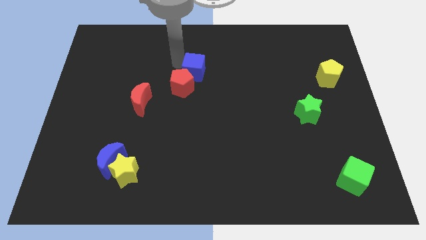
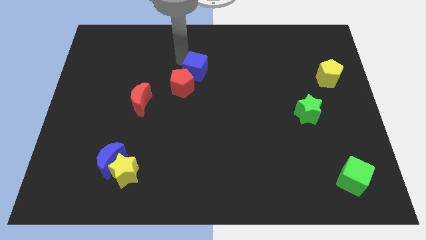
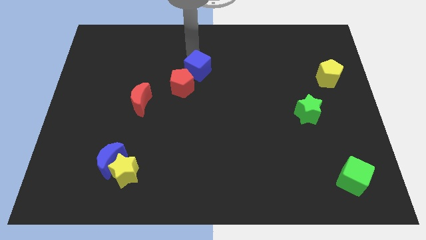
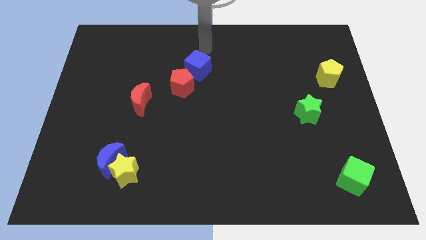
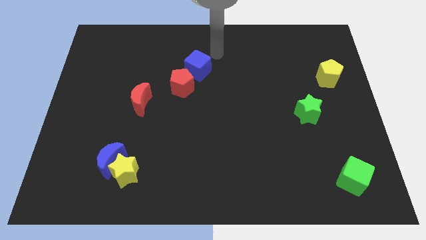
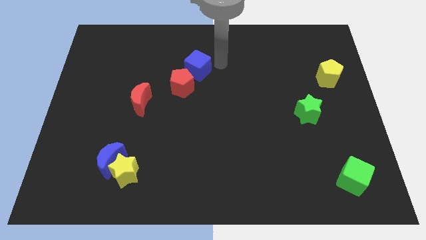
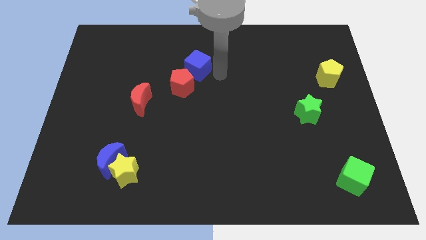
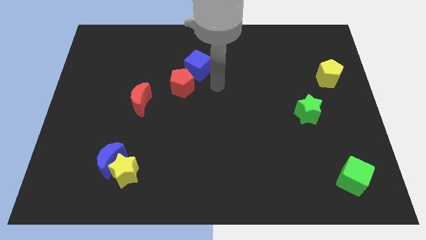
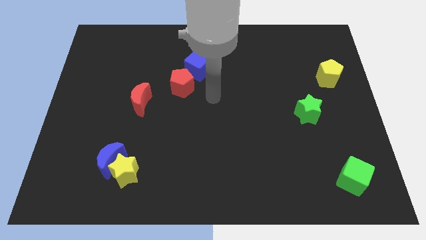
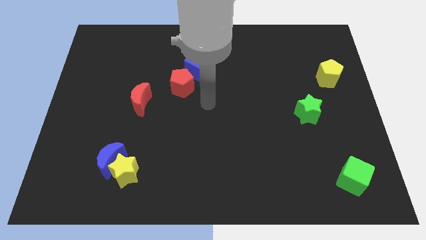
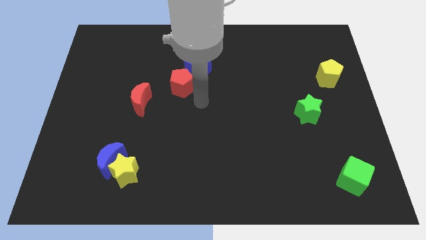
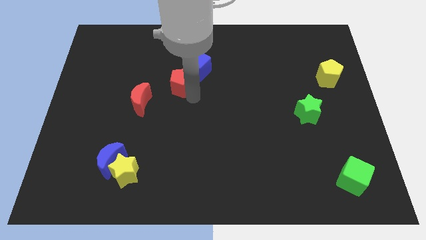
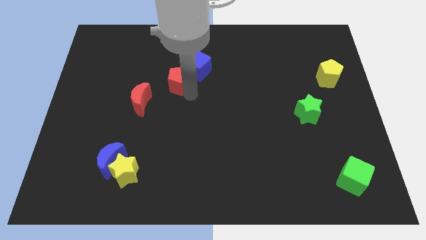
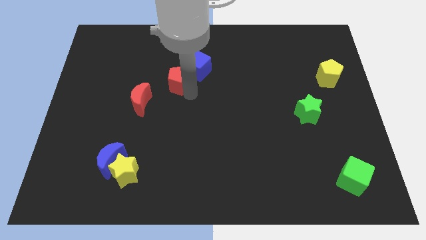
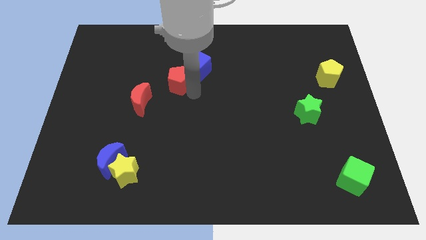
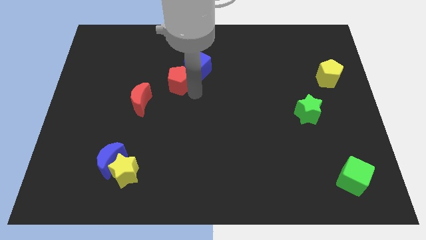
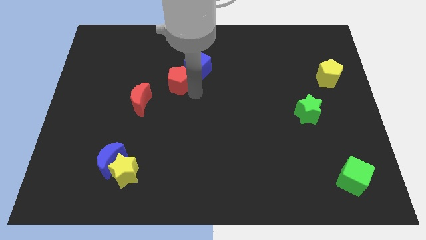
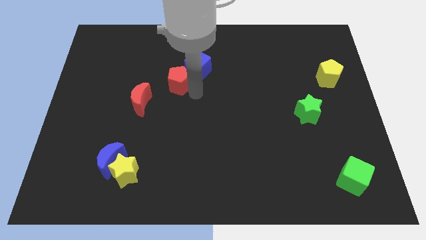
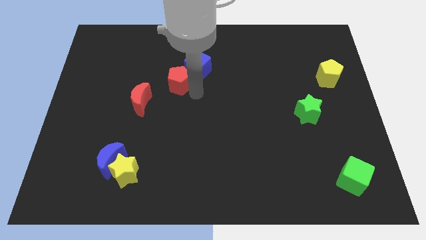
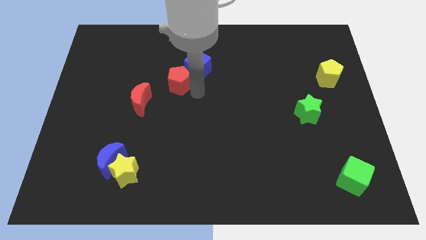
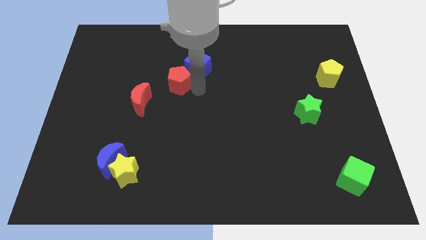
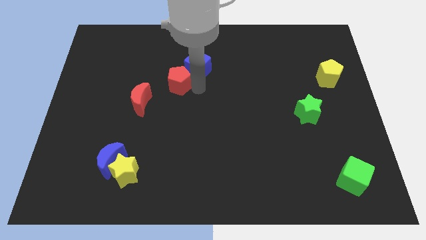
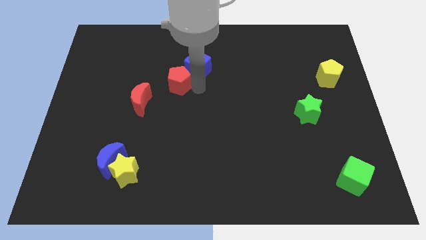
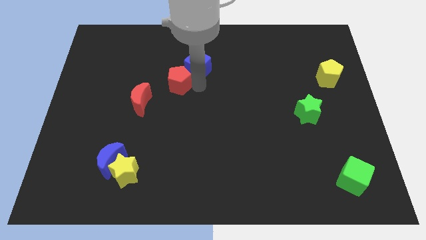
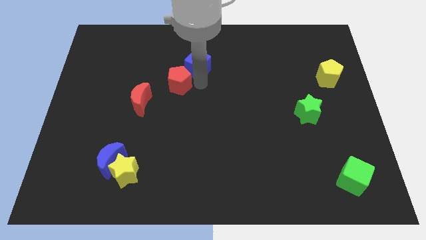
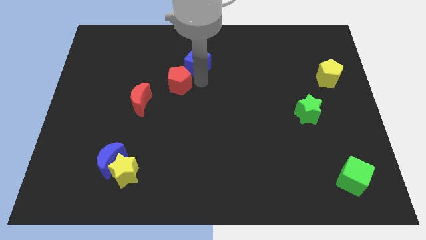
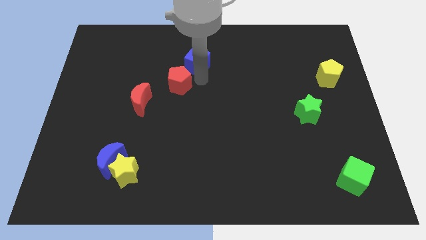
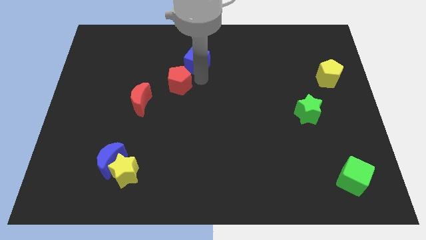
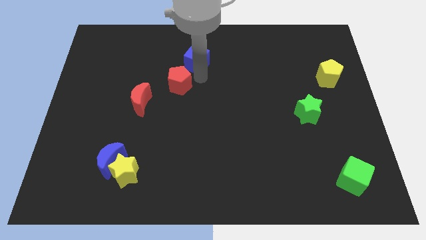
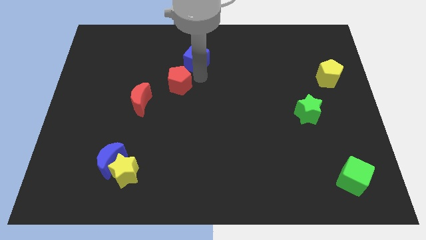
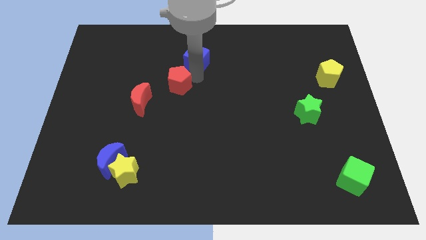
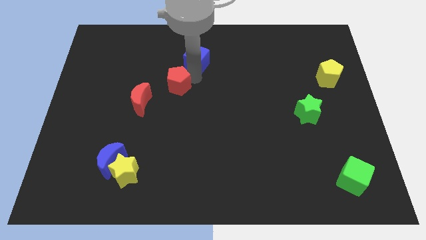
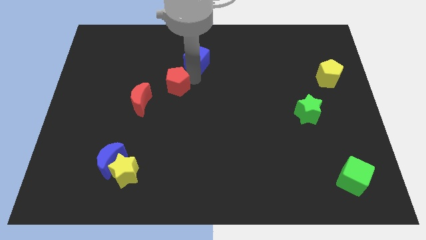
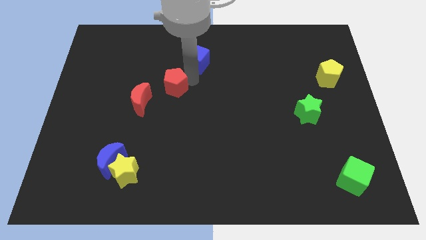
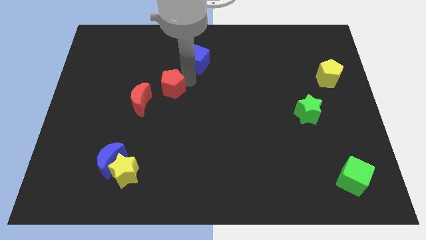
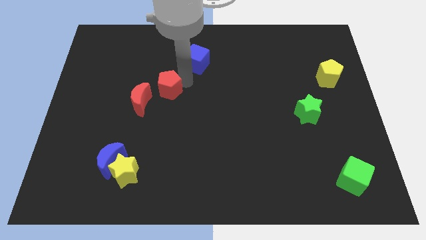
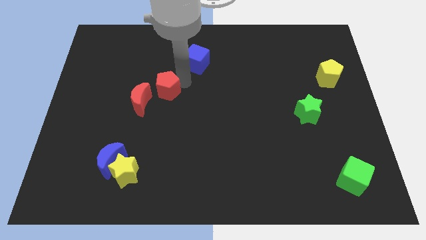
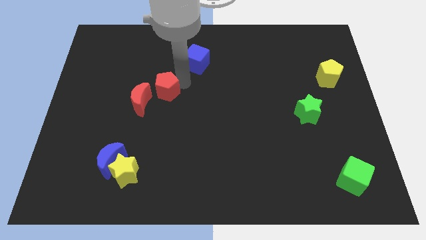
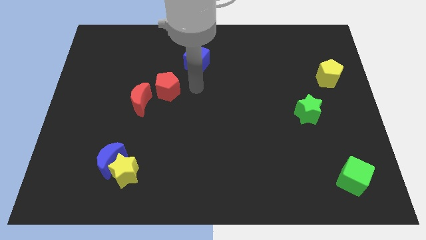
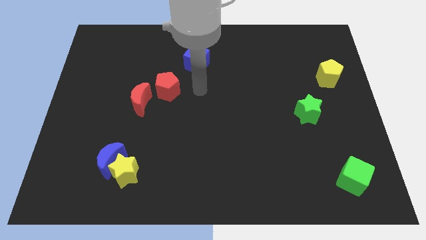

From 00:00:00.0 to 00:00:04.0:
separate the red pentagon and blue moon

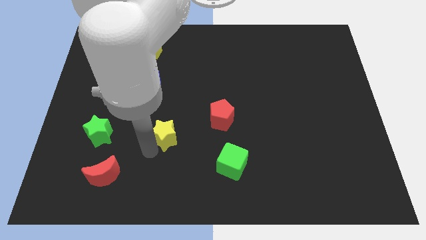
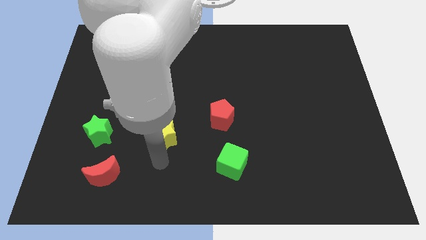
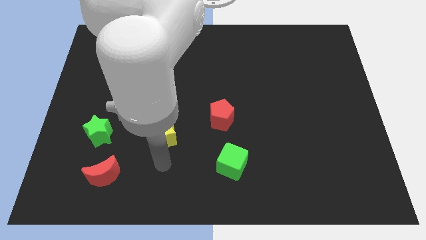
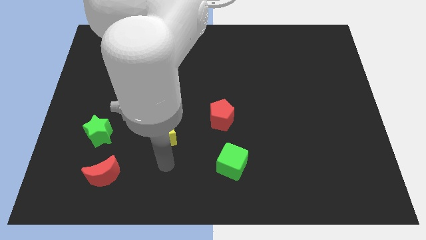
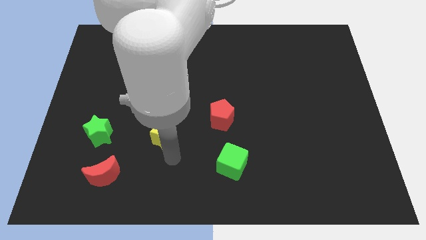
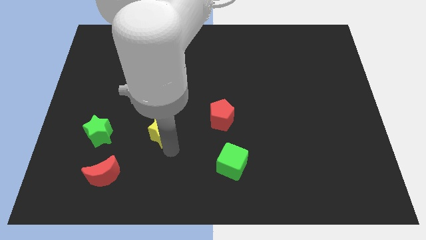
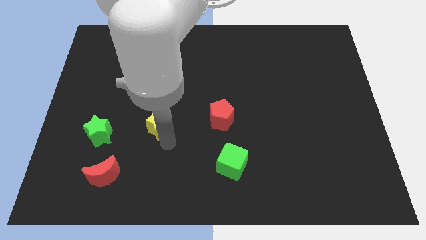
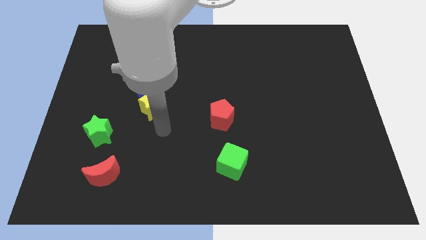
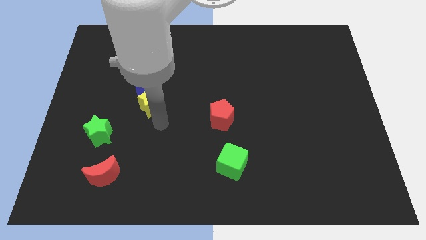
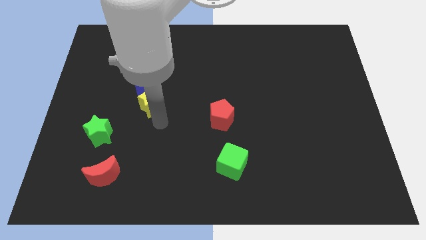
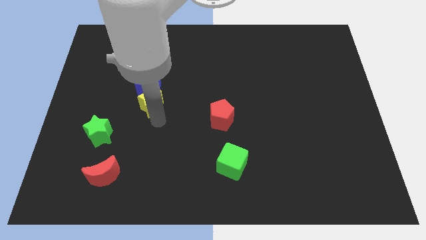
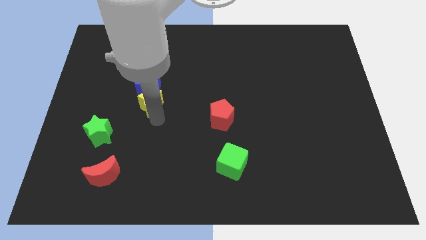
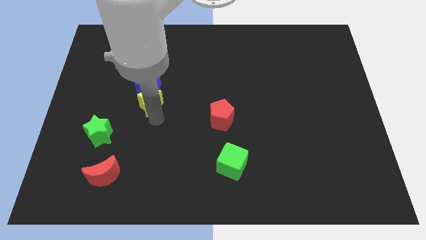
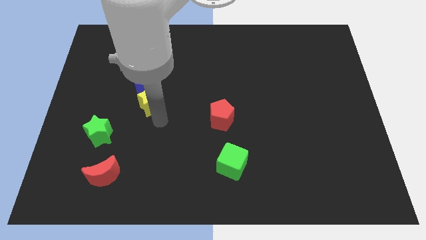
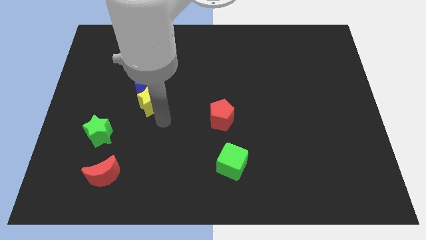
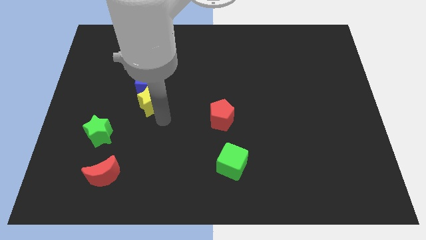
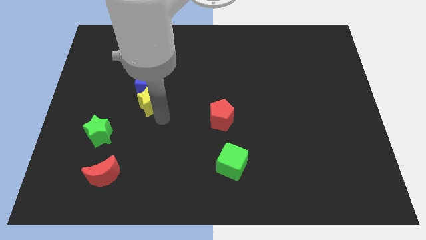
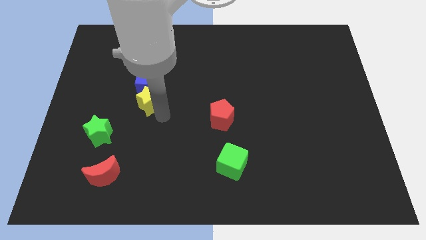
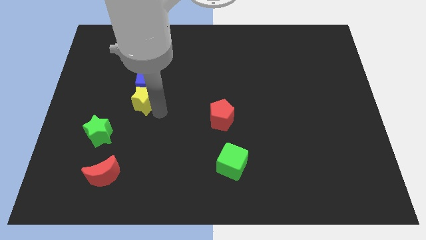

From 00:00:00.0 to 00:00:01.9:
push the yellow star towards the blue cube

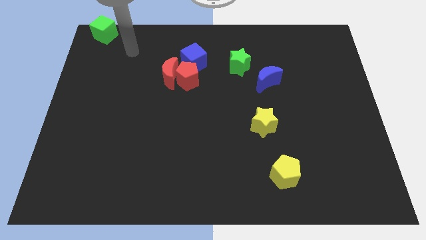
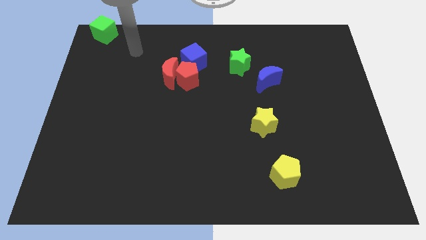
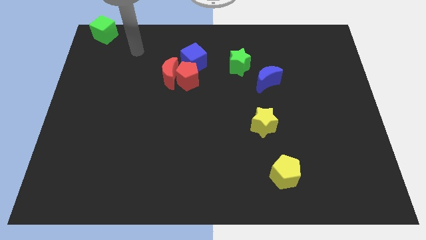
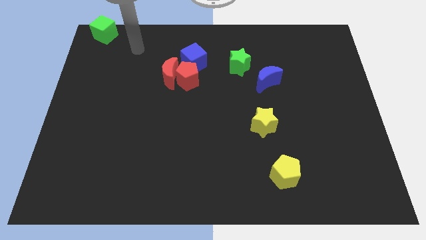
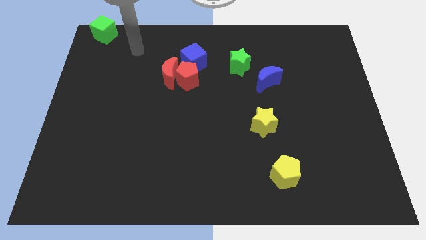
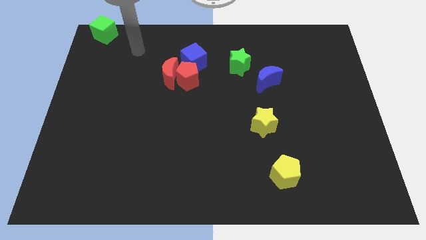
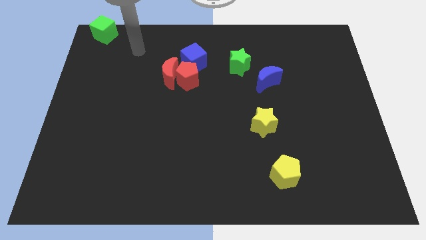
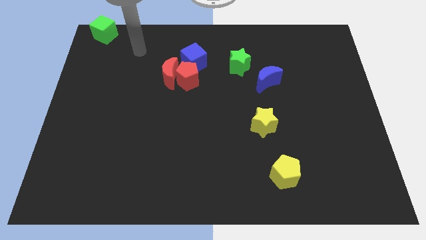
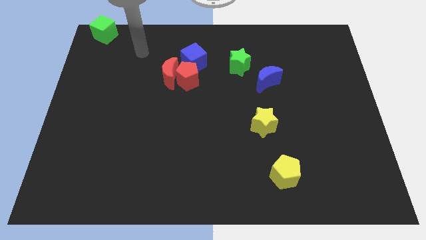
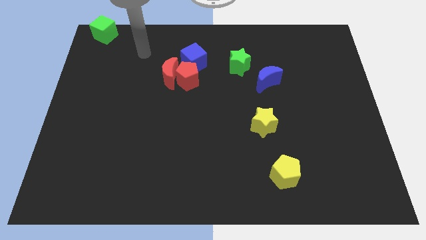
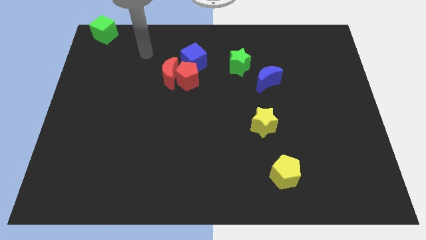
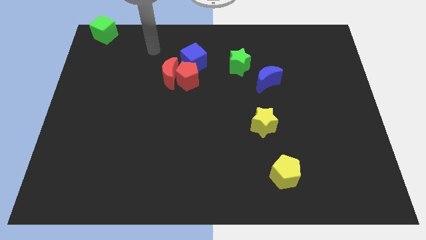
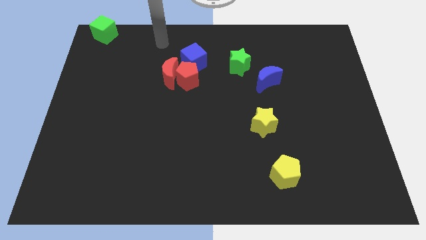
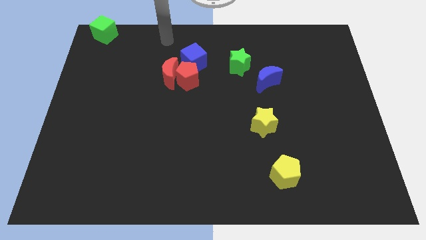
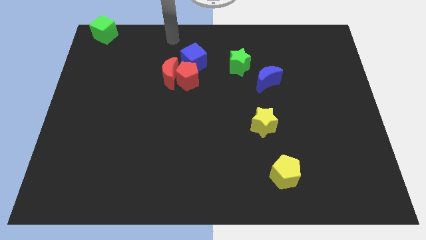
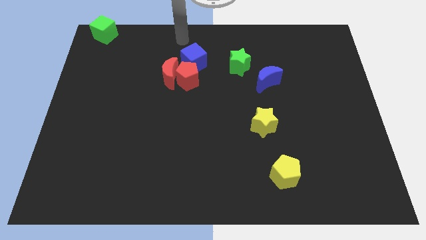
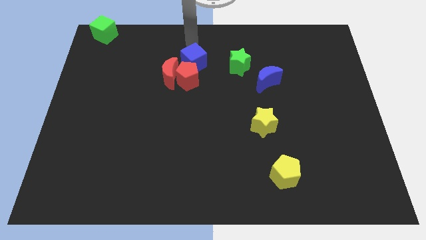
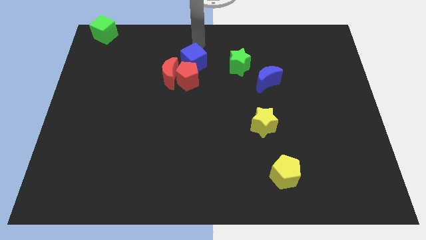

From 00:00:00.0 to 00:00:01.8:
move the arm above the blue cube

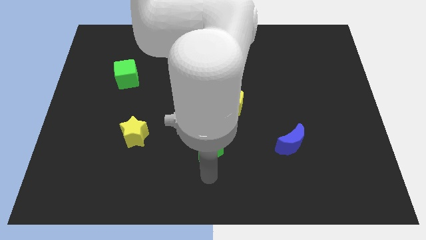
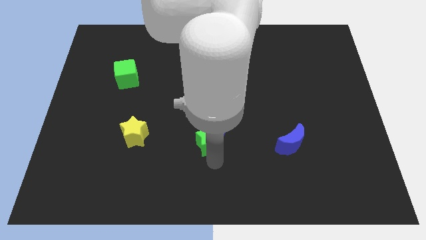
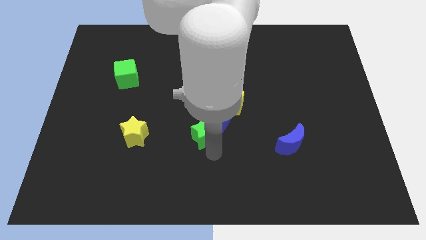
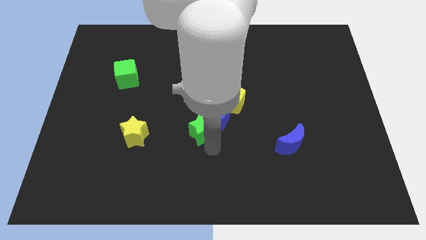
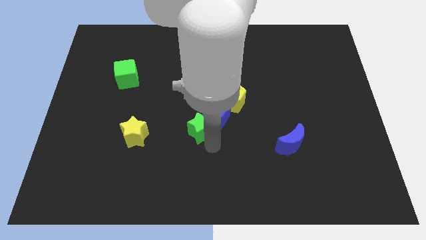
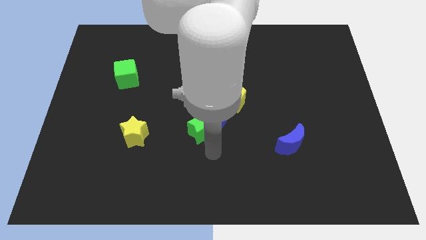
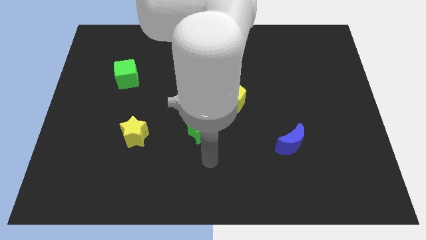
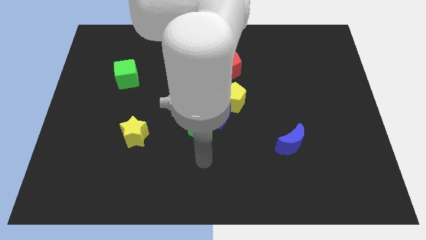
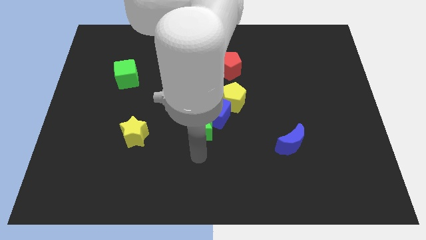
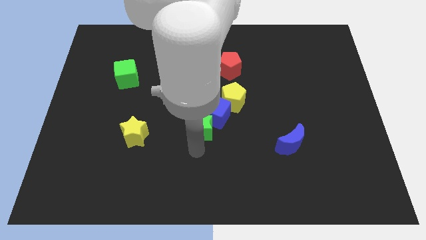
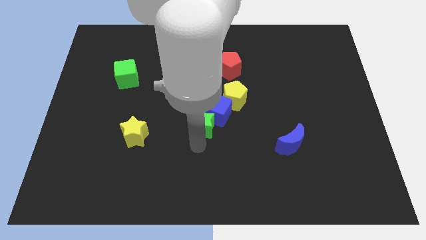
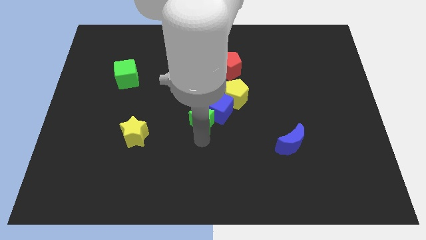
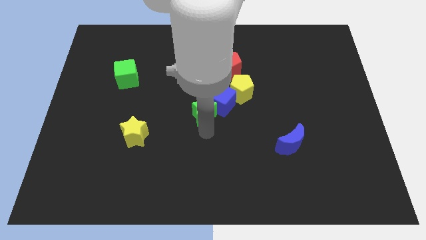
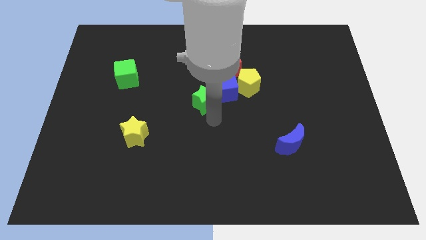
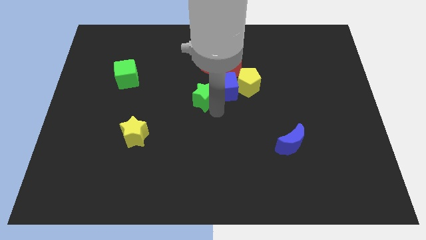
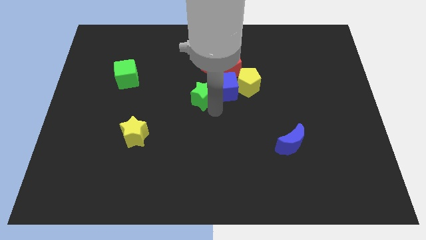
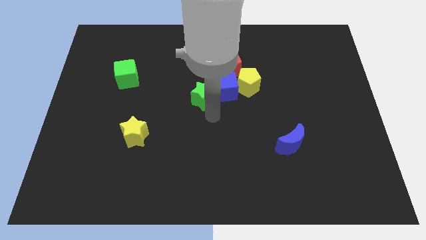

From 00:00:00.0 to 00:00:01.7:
move the green star along with the blue cube towards the center
